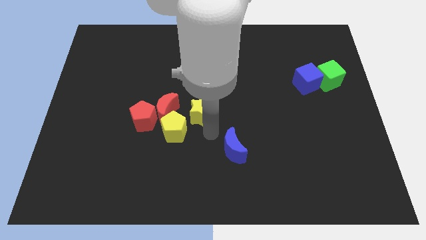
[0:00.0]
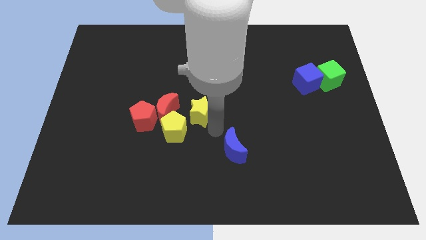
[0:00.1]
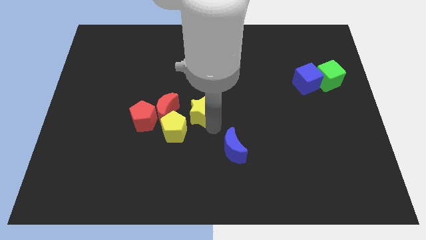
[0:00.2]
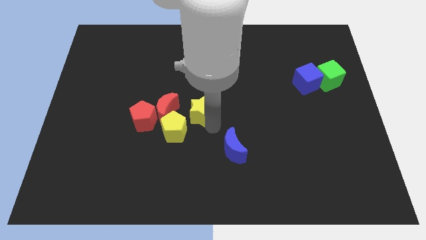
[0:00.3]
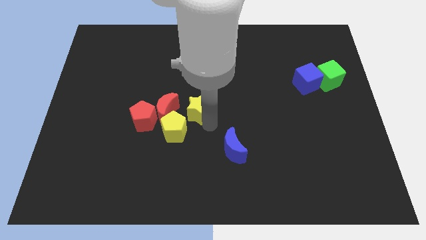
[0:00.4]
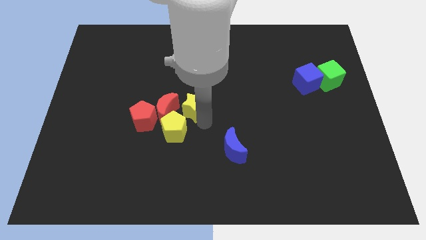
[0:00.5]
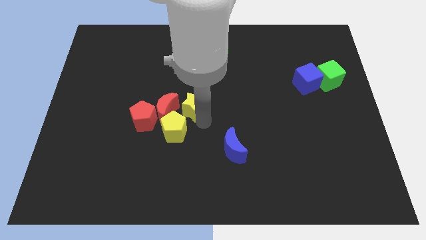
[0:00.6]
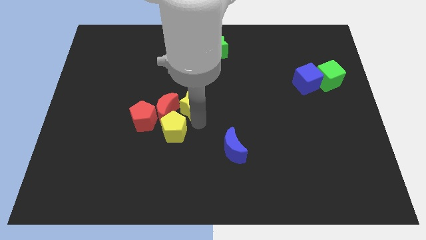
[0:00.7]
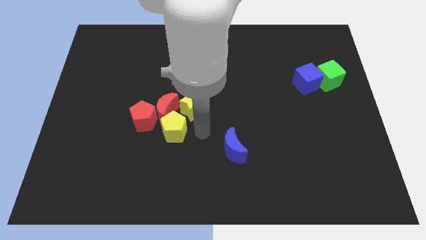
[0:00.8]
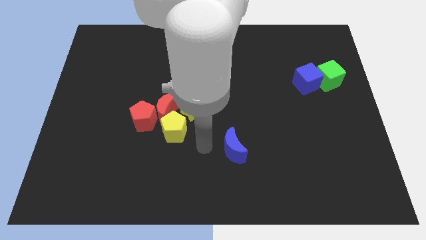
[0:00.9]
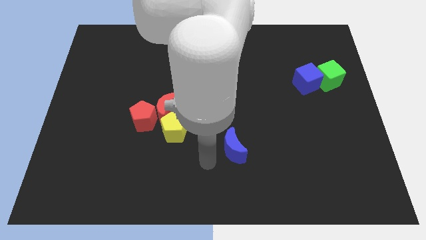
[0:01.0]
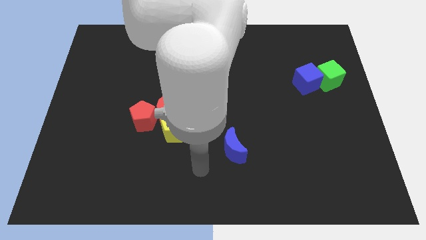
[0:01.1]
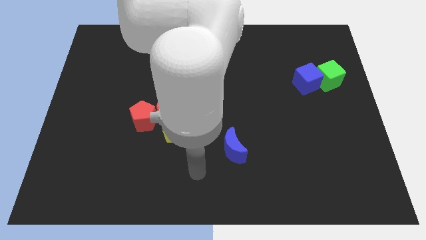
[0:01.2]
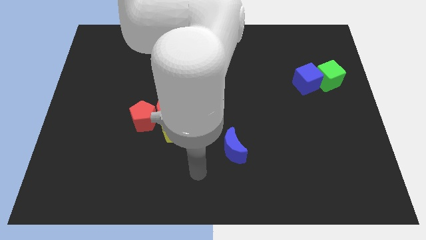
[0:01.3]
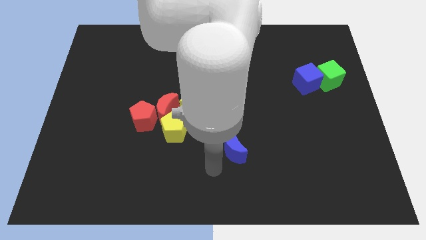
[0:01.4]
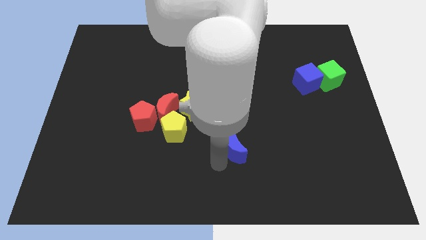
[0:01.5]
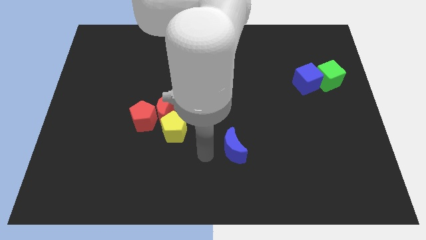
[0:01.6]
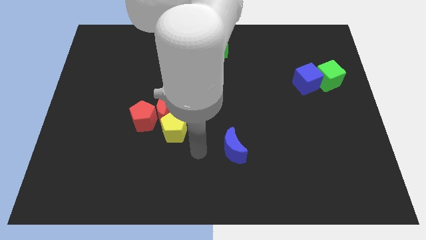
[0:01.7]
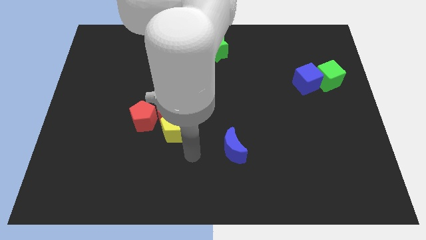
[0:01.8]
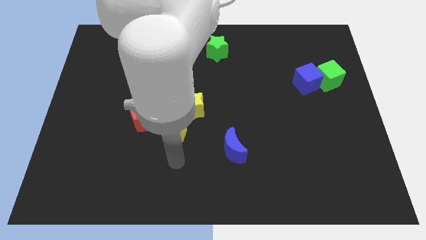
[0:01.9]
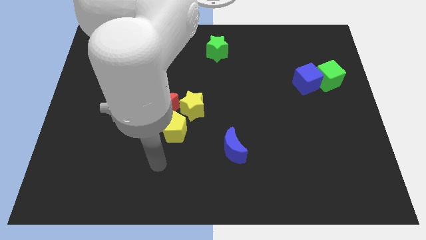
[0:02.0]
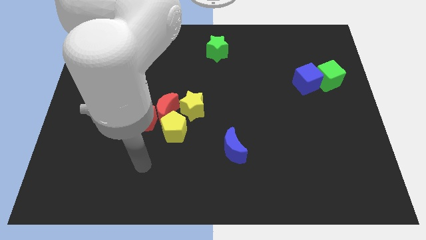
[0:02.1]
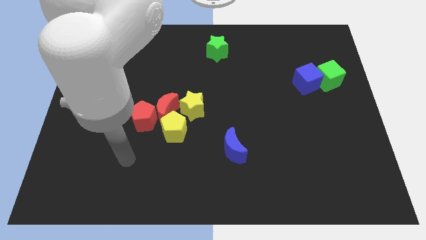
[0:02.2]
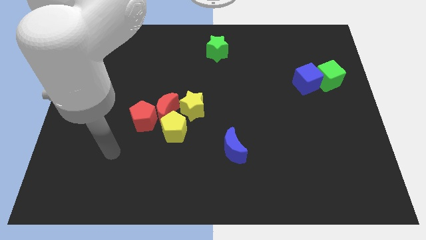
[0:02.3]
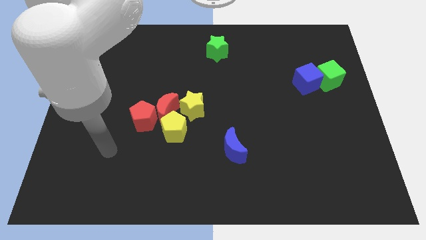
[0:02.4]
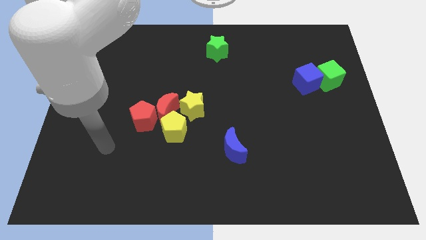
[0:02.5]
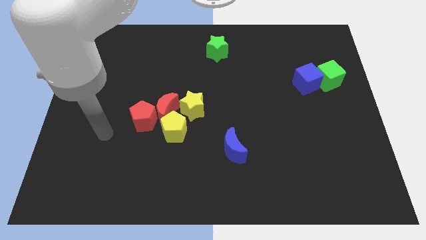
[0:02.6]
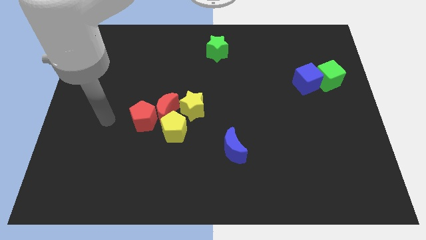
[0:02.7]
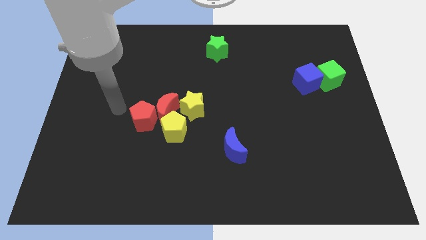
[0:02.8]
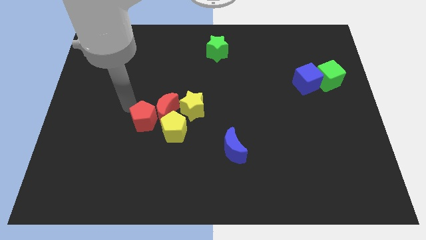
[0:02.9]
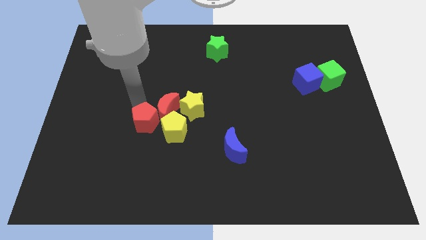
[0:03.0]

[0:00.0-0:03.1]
push the yellow star above the yellow pentagon

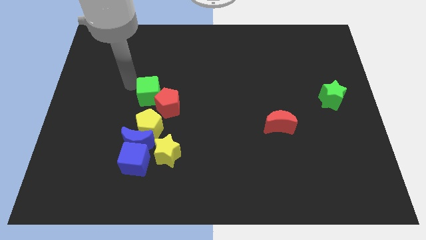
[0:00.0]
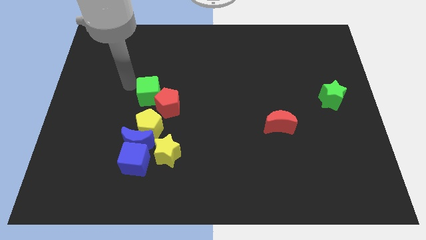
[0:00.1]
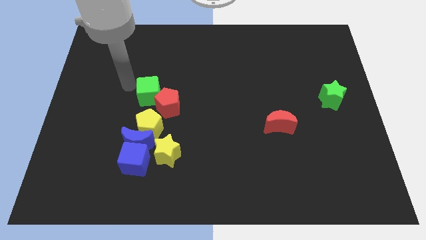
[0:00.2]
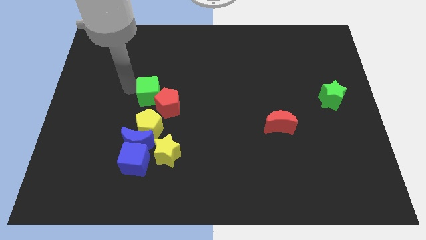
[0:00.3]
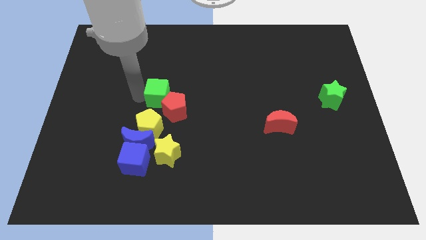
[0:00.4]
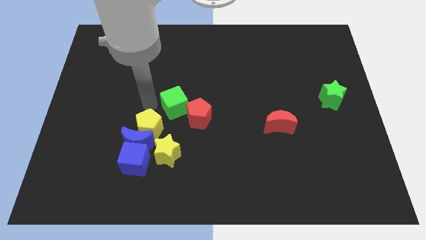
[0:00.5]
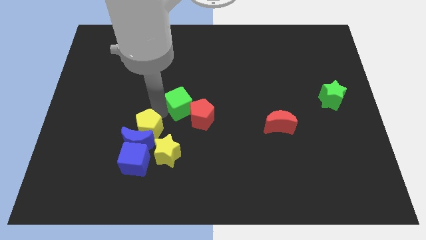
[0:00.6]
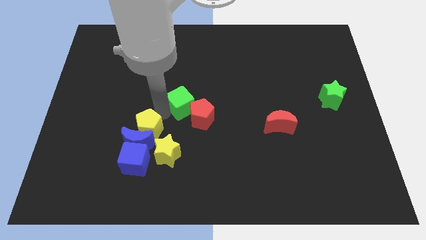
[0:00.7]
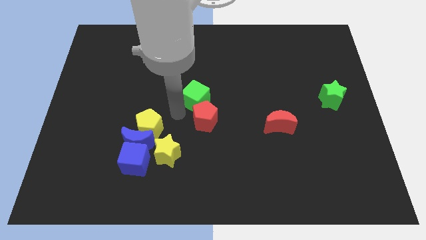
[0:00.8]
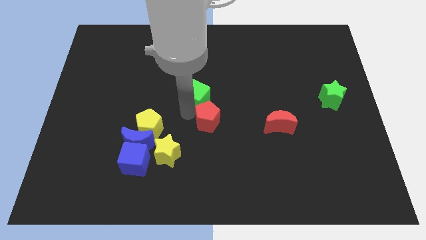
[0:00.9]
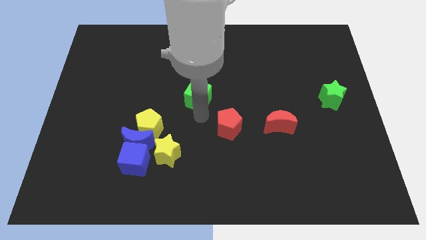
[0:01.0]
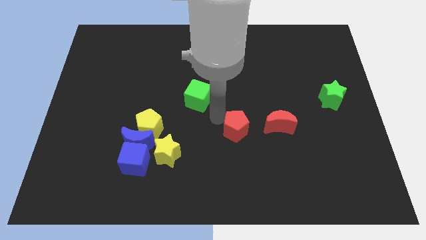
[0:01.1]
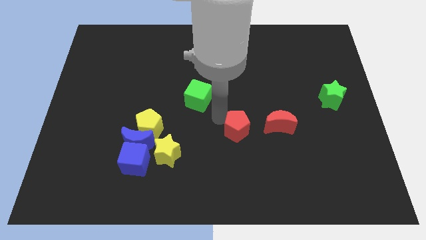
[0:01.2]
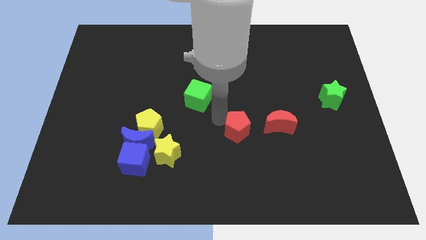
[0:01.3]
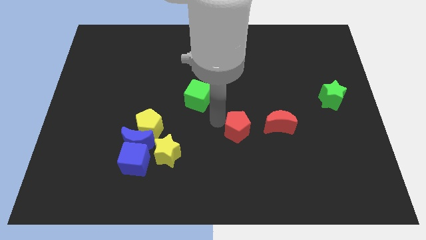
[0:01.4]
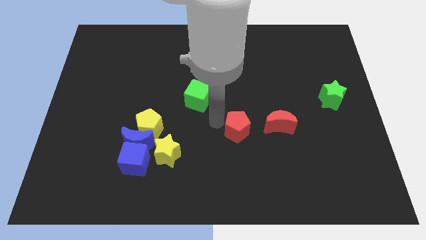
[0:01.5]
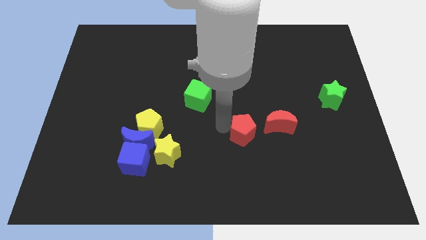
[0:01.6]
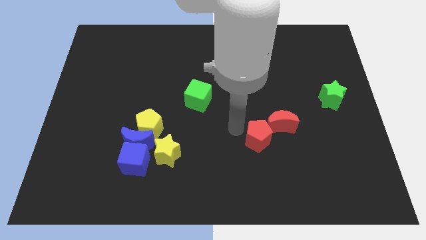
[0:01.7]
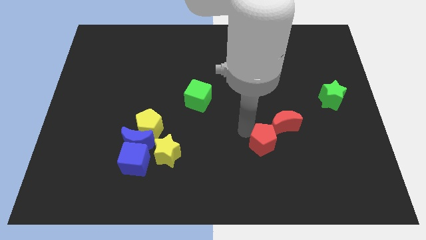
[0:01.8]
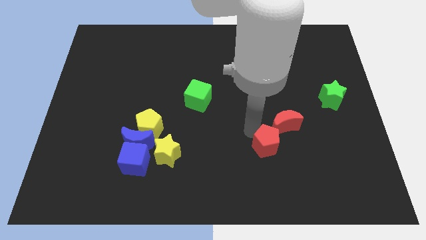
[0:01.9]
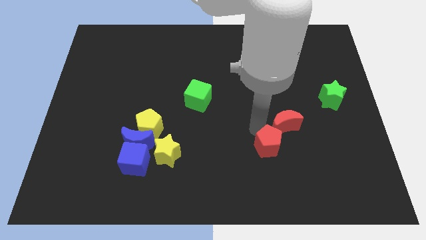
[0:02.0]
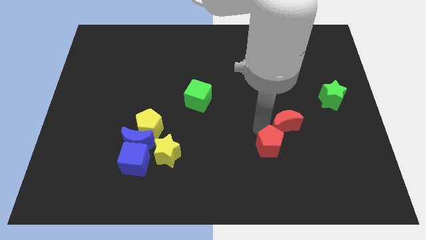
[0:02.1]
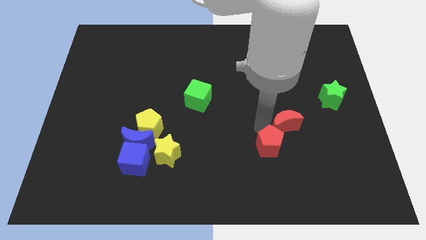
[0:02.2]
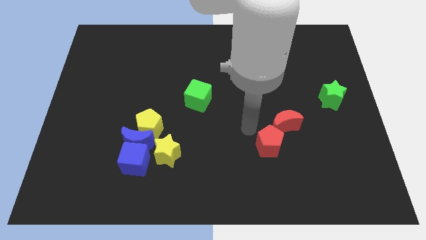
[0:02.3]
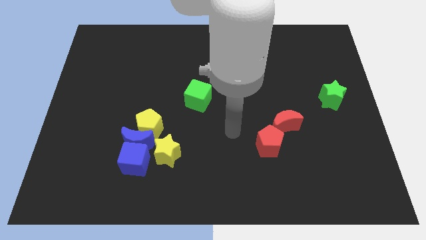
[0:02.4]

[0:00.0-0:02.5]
push the red pentagon at the bottom left of the red moon

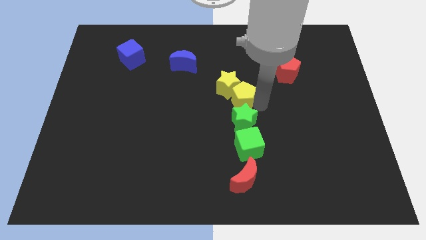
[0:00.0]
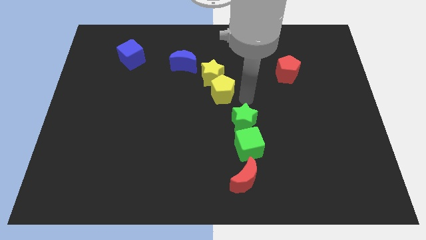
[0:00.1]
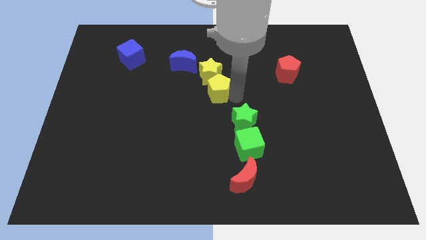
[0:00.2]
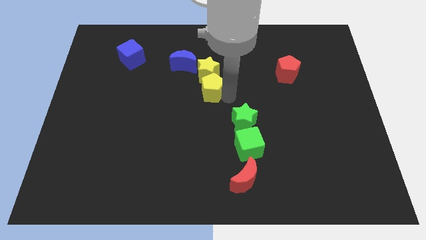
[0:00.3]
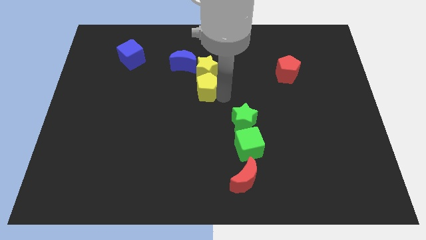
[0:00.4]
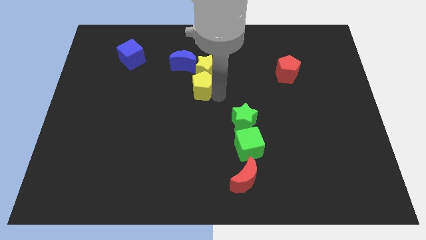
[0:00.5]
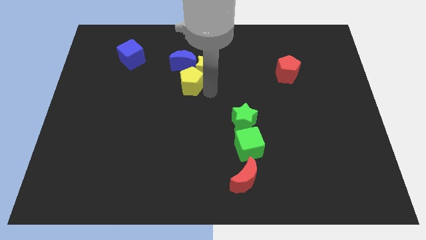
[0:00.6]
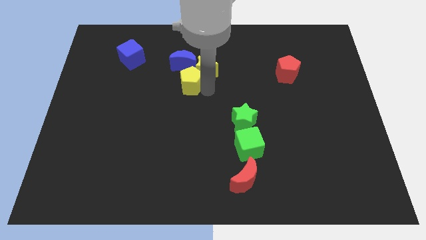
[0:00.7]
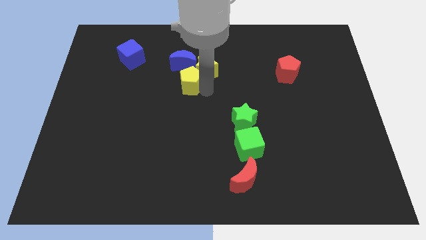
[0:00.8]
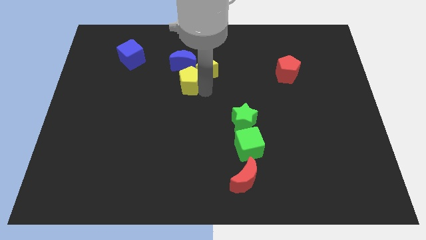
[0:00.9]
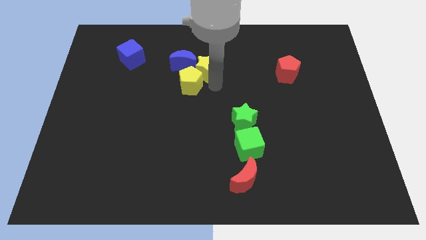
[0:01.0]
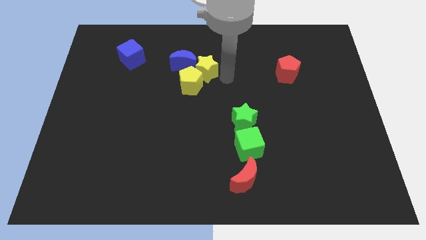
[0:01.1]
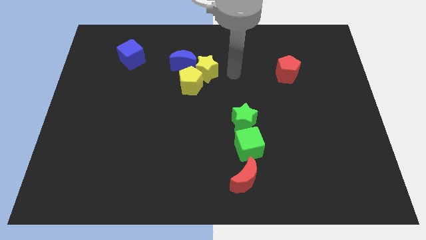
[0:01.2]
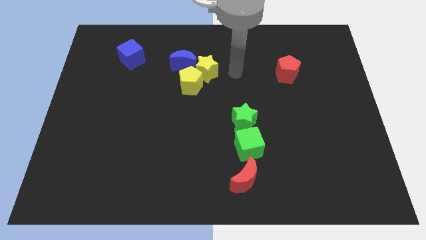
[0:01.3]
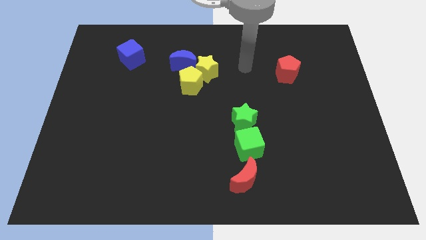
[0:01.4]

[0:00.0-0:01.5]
place the yellow pentagon below the blue moon

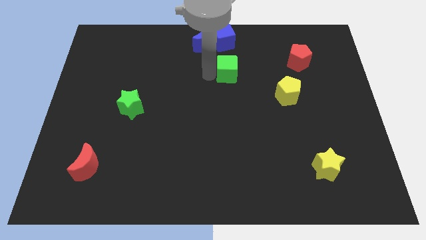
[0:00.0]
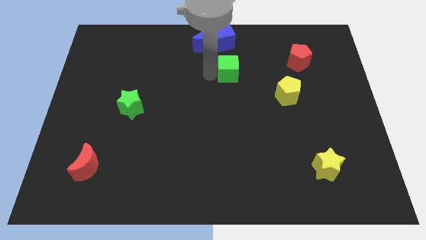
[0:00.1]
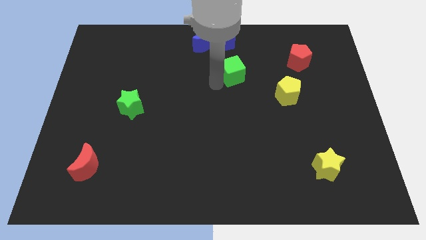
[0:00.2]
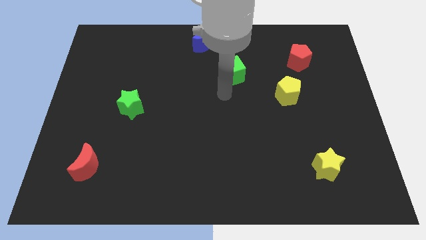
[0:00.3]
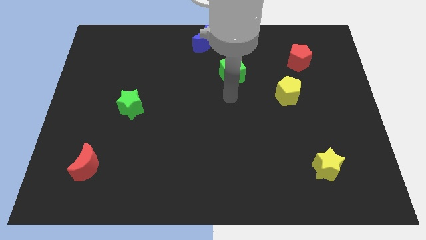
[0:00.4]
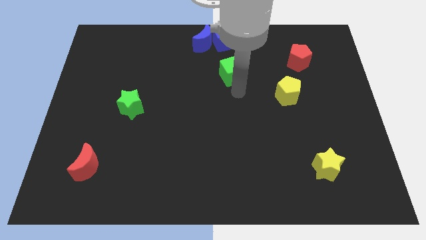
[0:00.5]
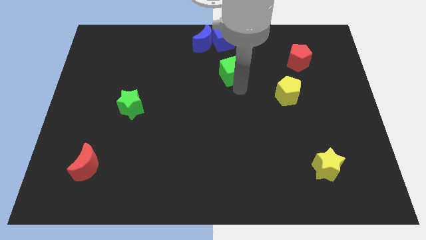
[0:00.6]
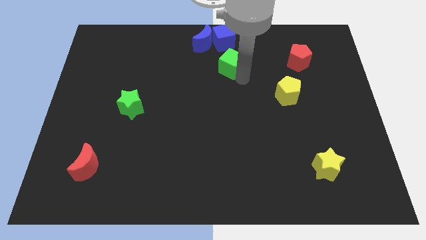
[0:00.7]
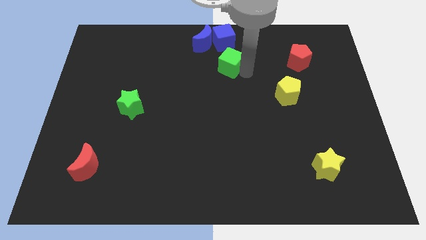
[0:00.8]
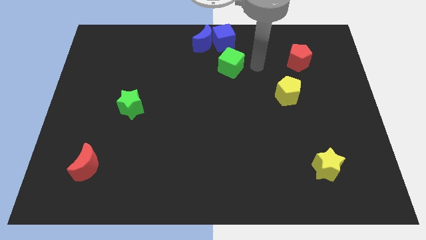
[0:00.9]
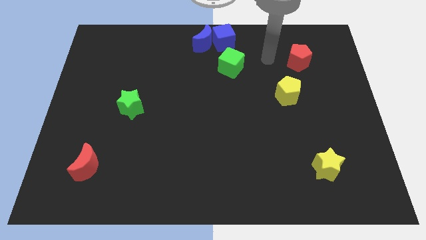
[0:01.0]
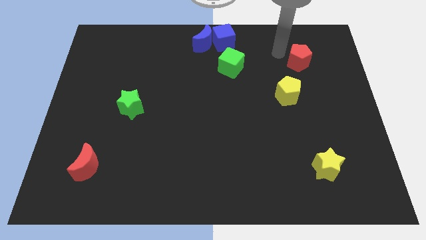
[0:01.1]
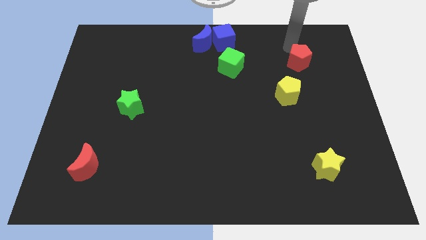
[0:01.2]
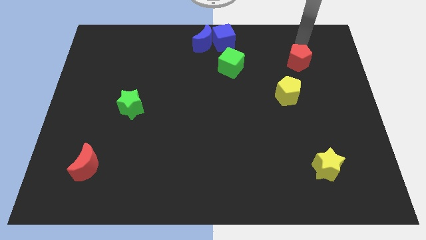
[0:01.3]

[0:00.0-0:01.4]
push the green cube down to the blue cube

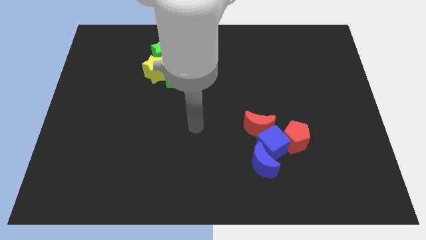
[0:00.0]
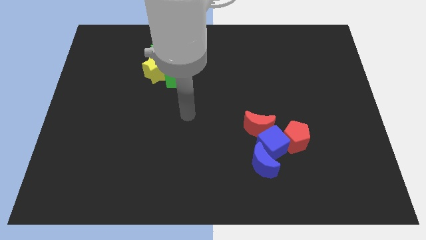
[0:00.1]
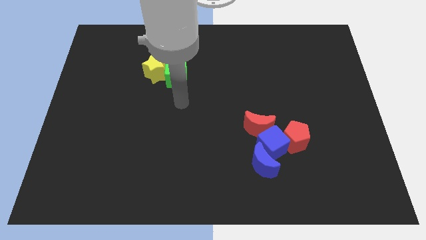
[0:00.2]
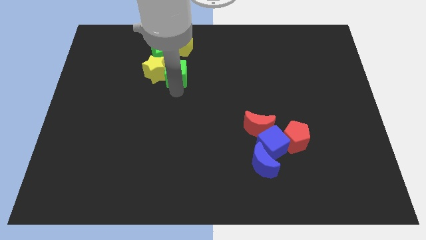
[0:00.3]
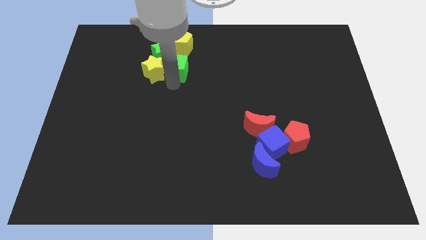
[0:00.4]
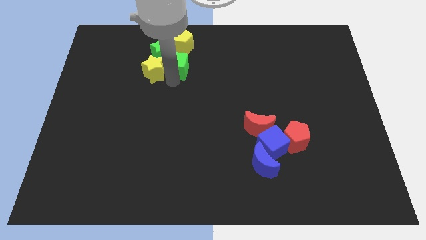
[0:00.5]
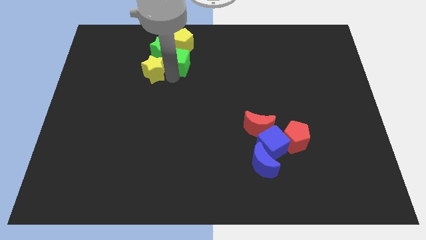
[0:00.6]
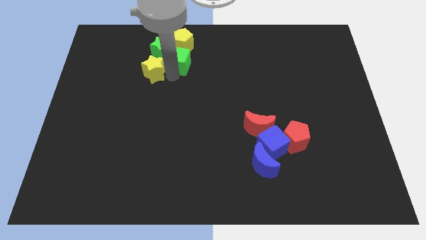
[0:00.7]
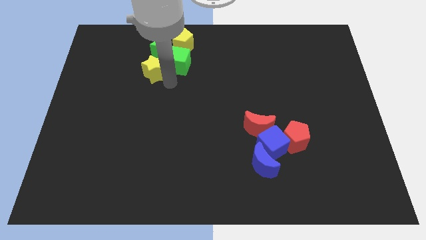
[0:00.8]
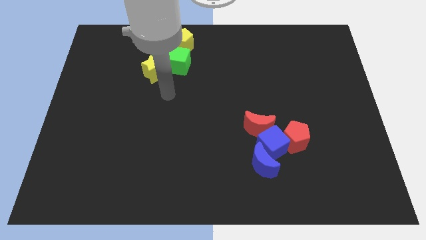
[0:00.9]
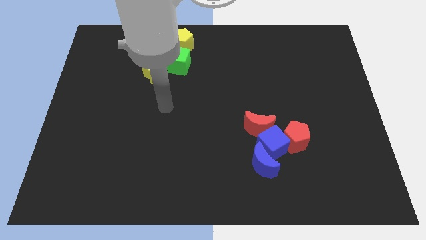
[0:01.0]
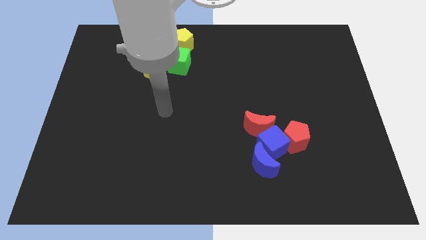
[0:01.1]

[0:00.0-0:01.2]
push the green cube into the yellow pentagon
